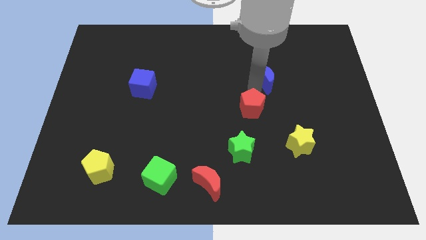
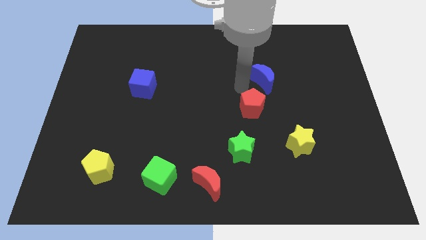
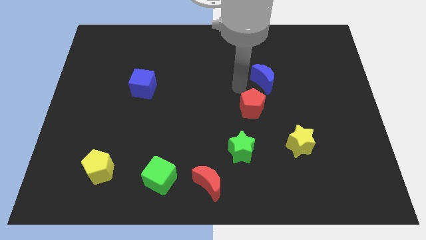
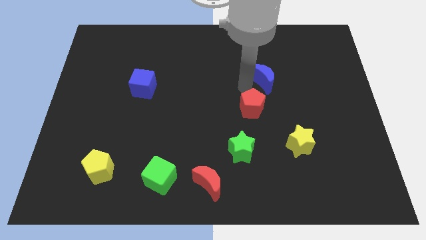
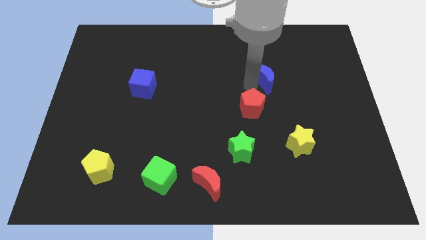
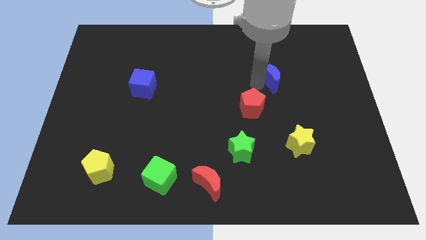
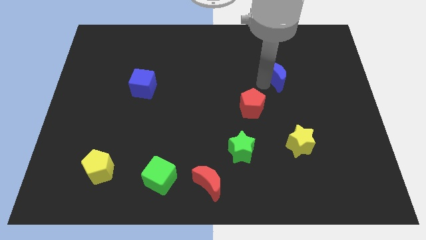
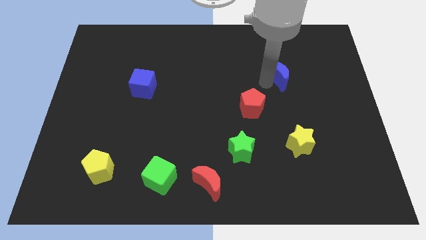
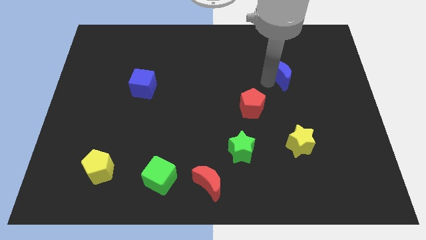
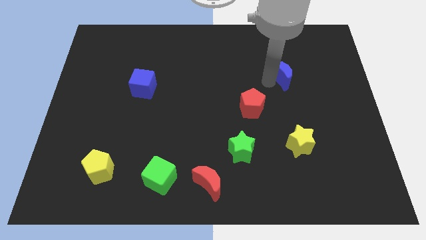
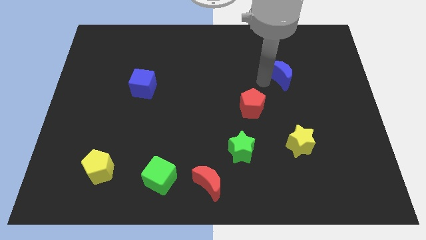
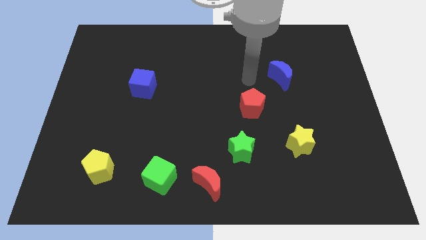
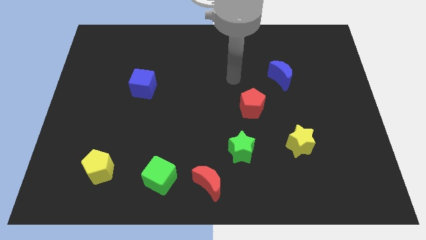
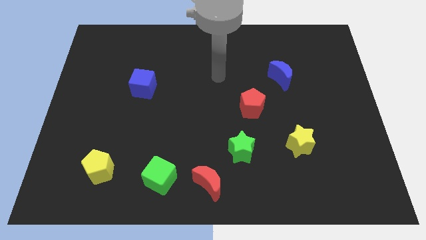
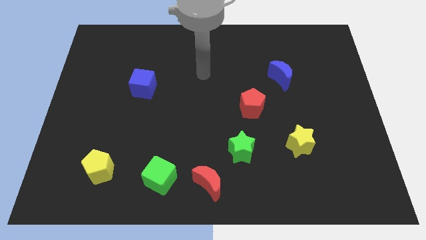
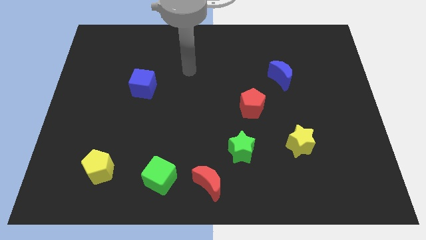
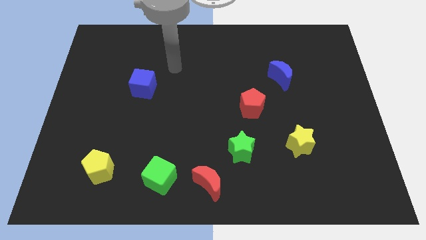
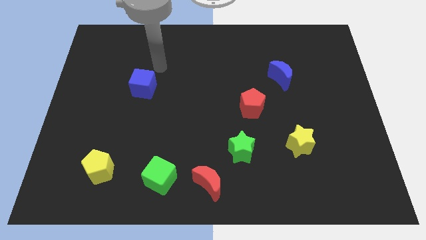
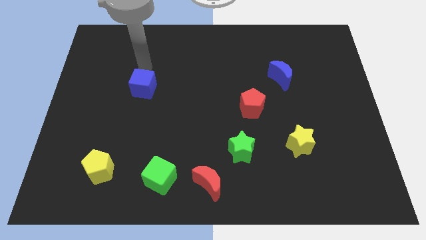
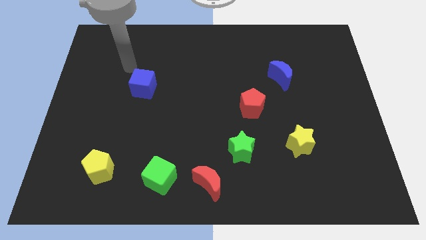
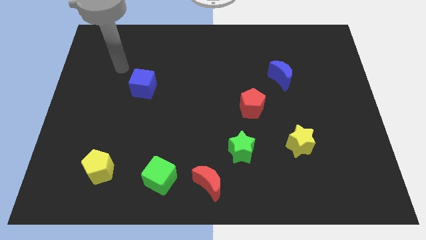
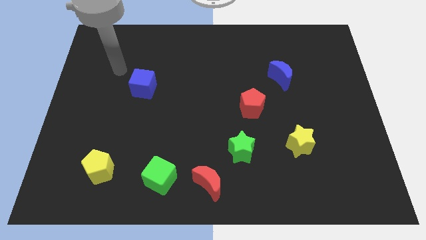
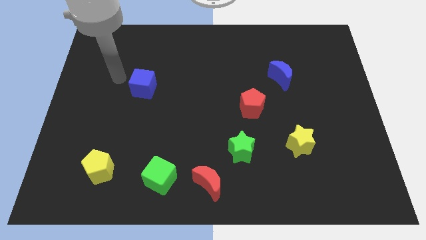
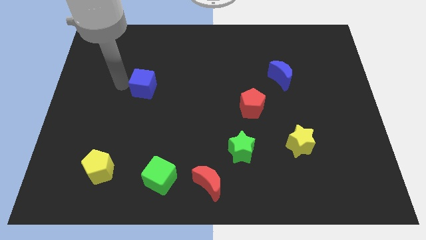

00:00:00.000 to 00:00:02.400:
place the blue crescent diagonal top right to the red pentagon

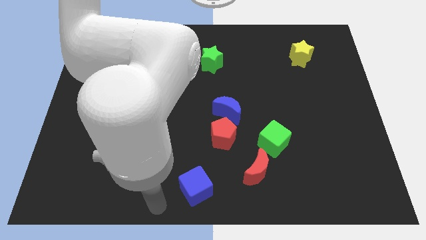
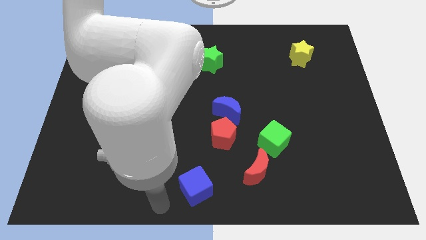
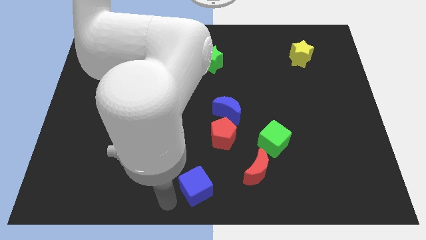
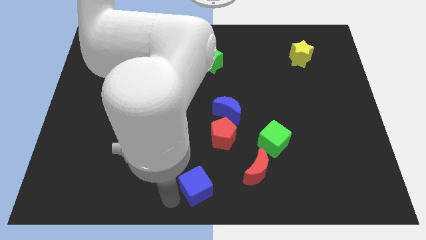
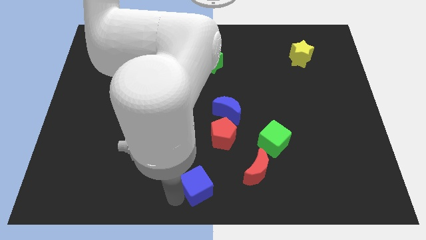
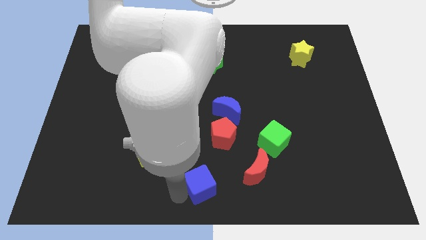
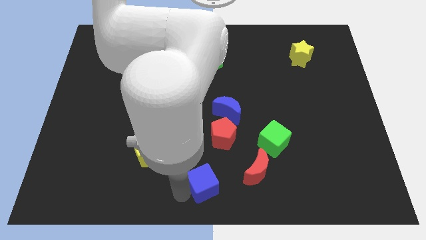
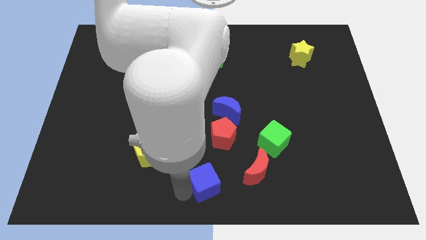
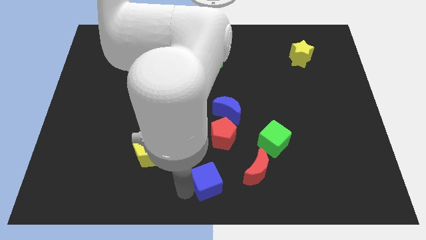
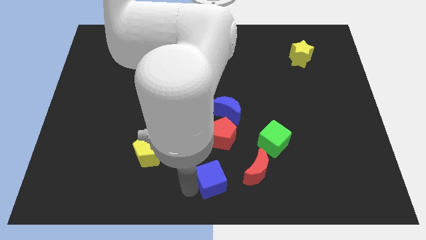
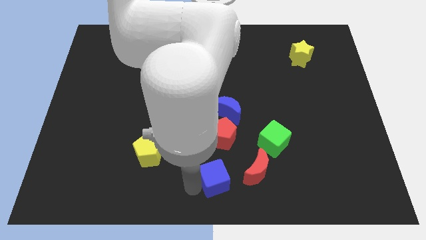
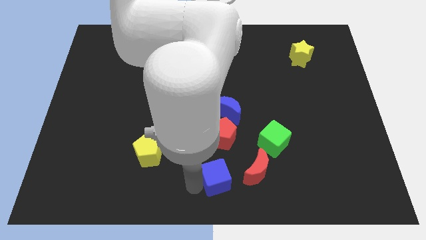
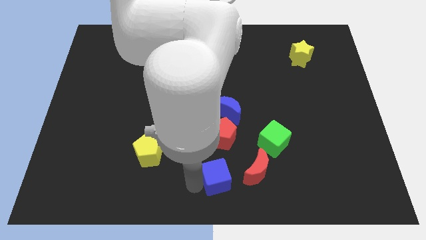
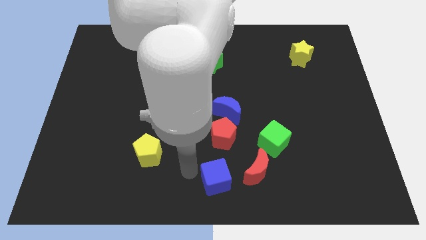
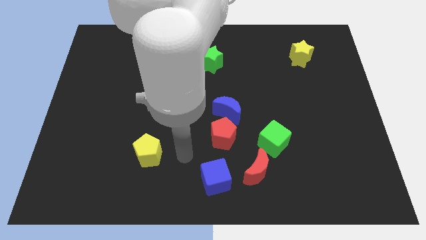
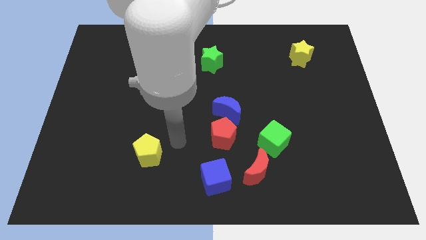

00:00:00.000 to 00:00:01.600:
place the blue cube below the red pentagon

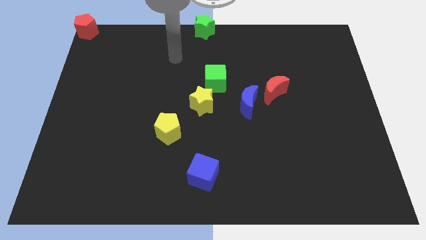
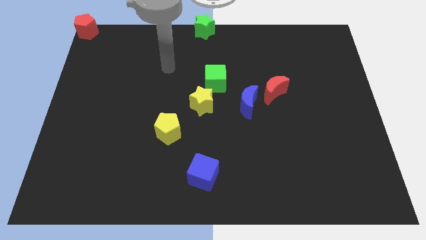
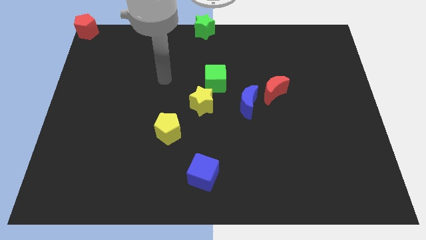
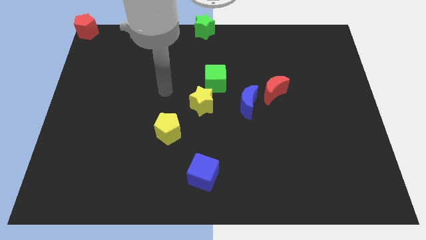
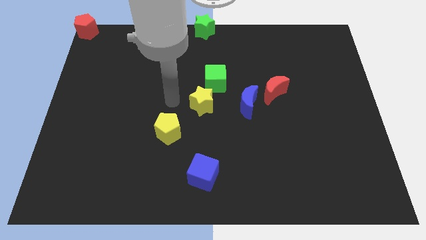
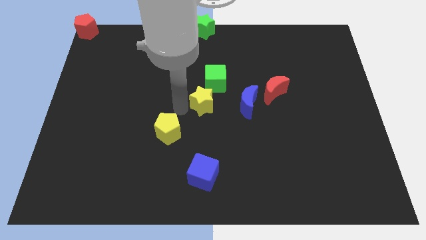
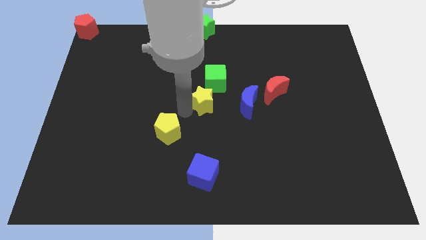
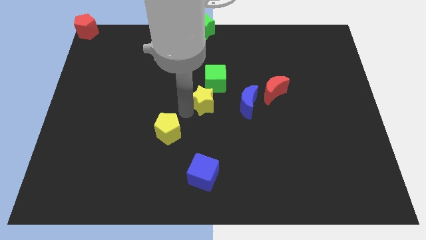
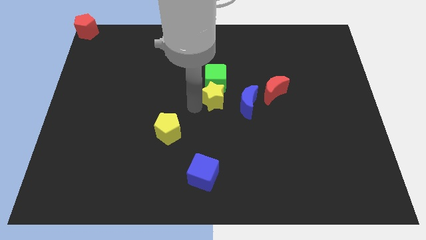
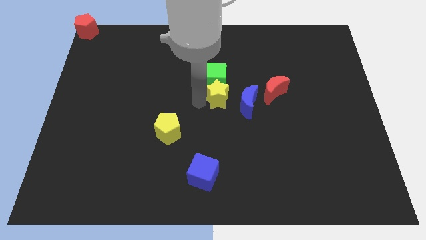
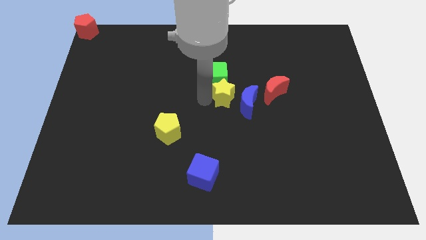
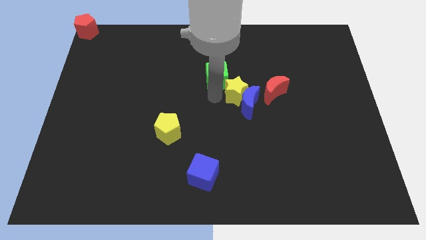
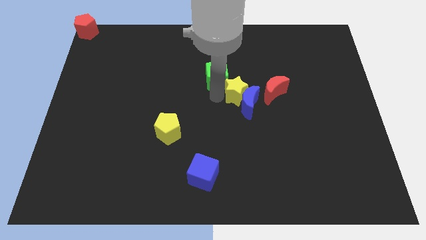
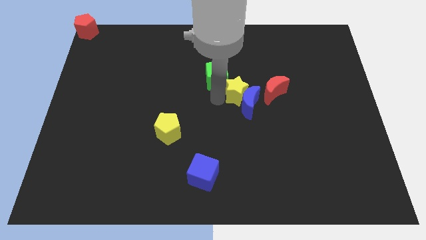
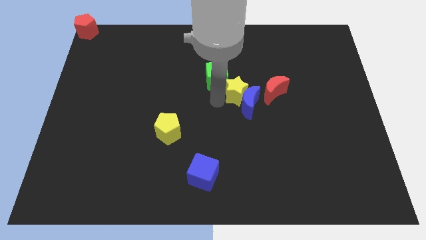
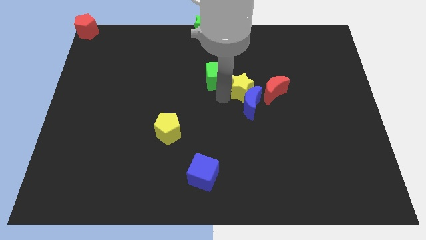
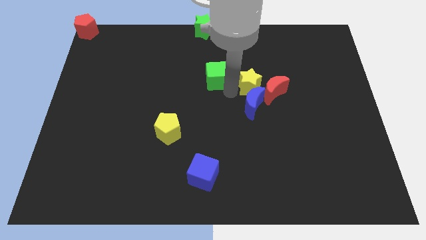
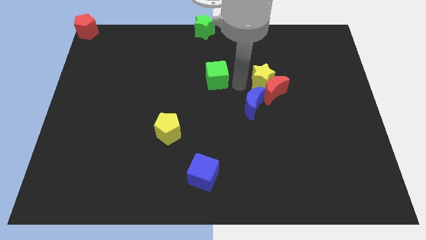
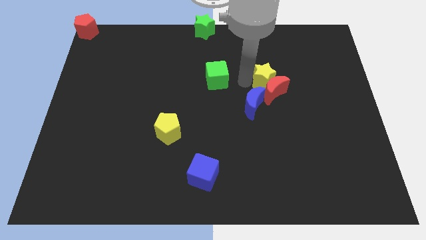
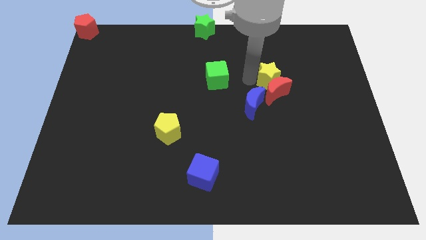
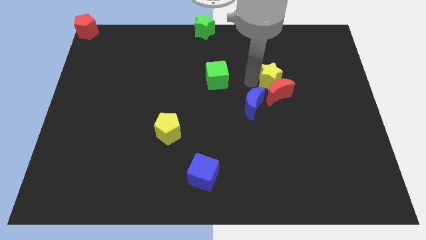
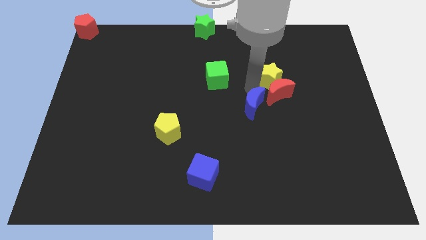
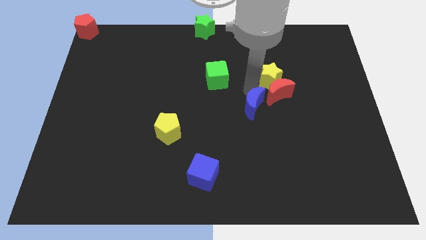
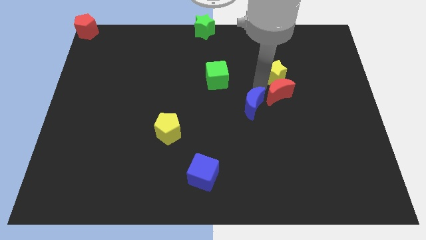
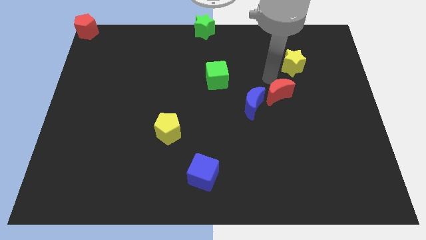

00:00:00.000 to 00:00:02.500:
place yellow star above red pentagon

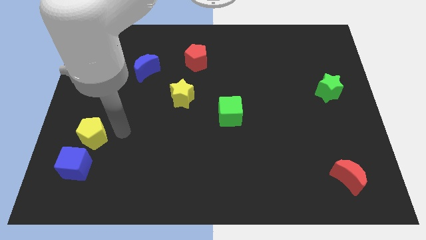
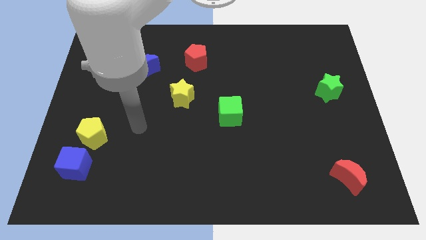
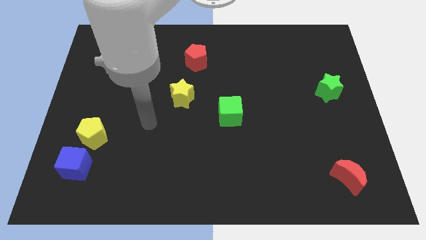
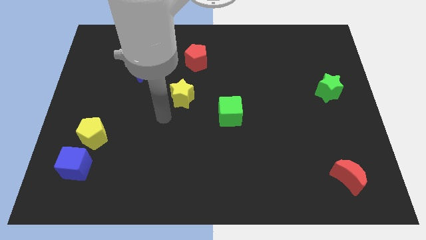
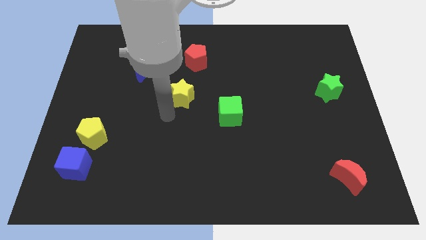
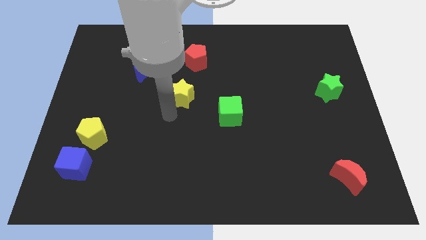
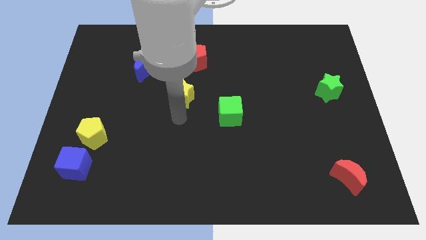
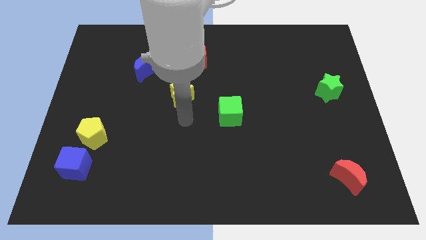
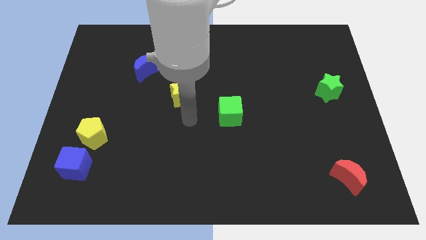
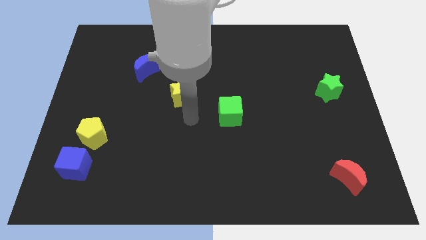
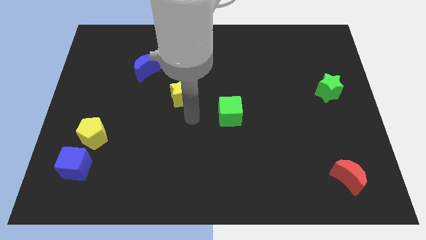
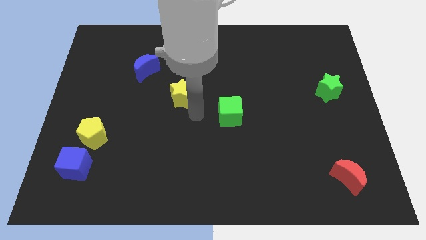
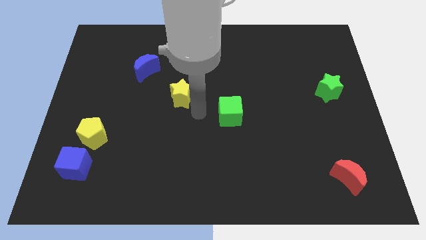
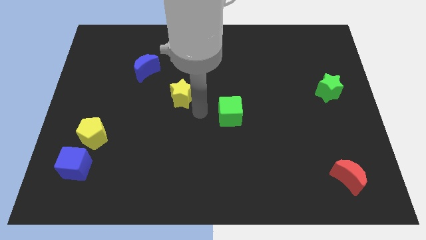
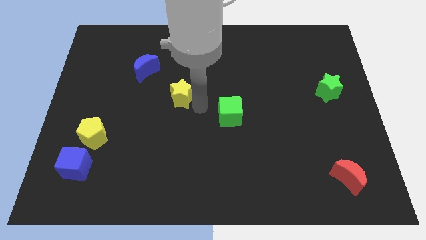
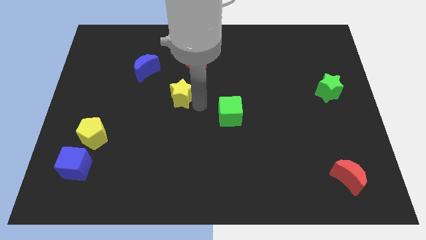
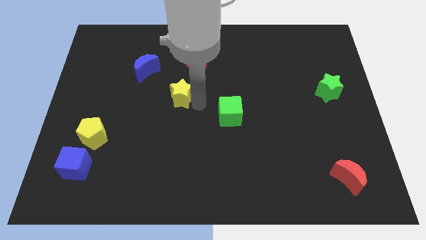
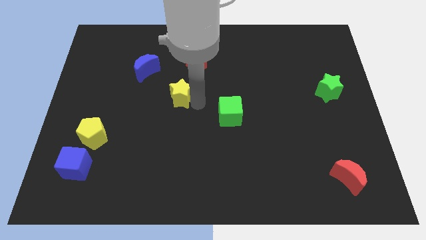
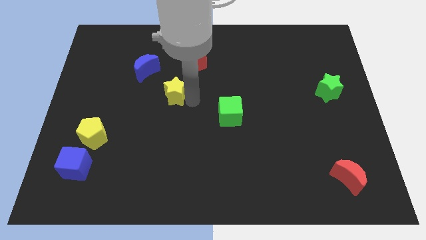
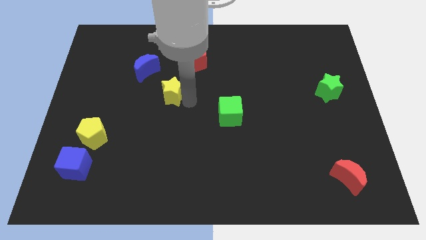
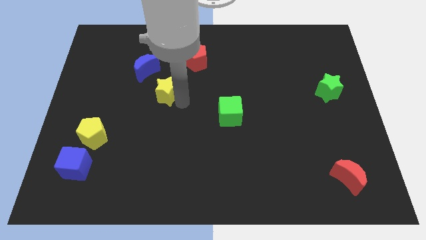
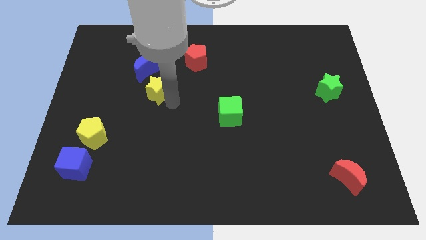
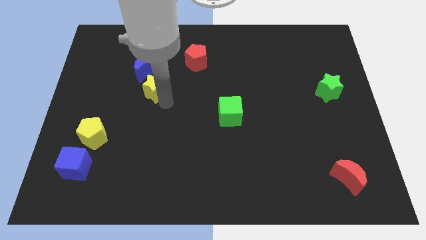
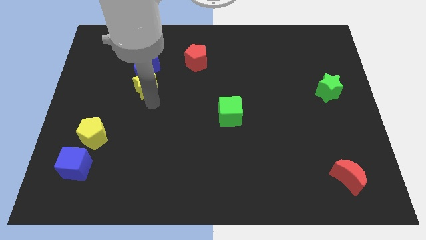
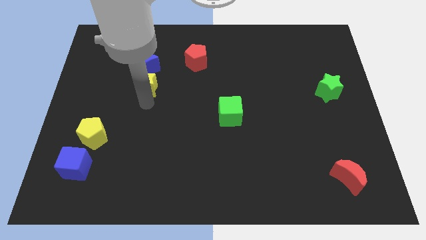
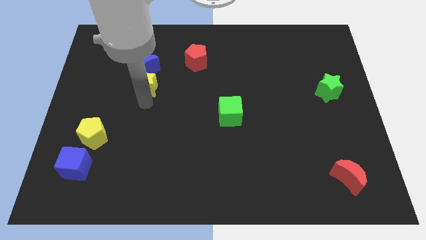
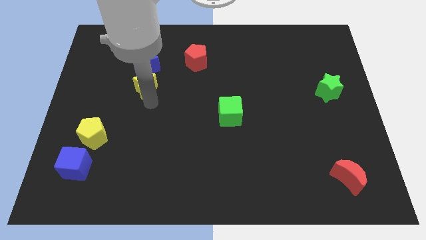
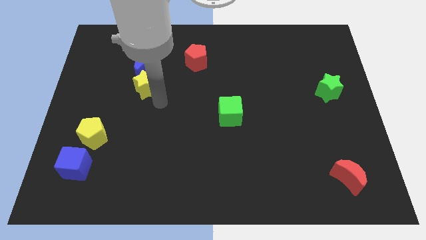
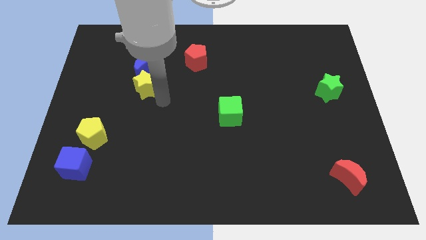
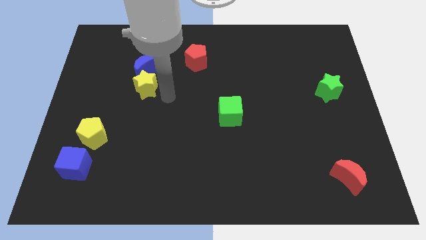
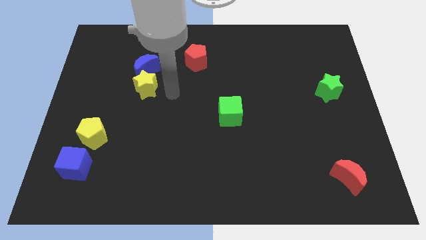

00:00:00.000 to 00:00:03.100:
push the yellow star to the bottom of the blue crescent
